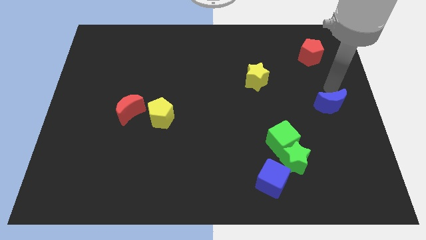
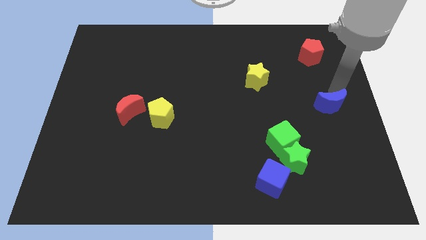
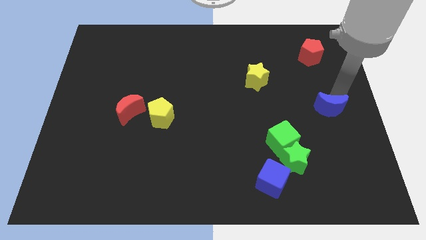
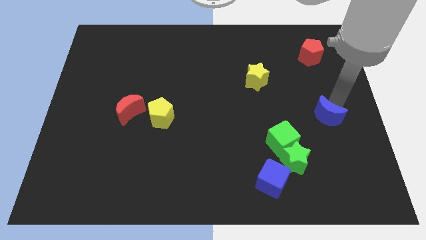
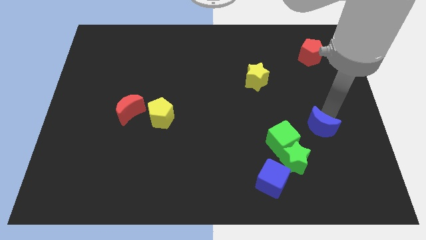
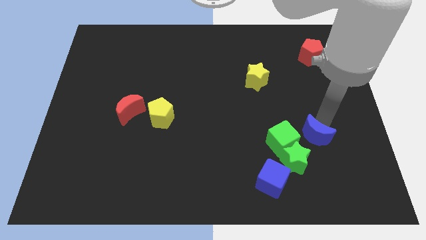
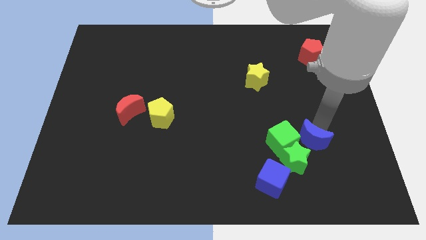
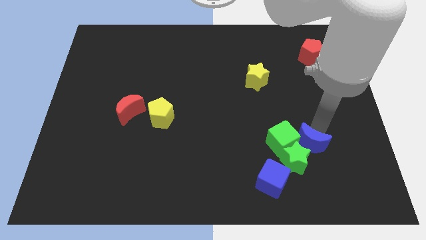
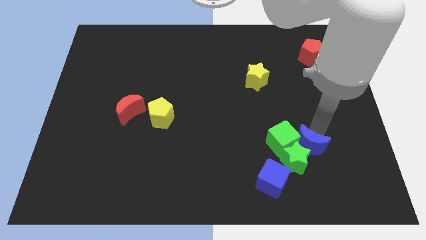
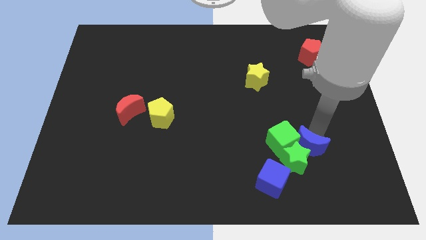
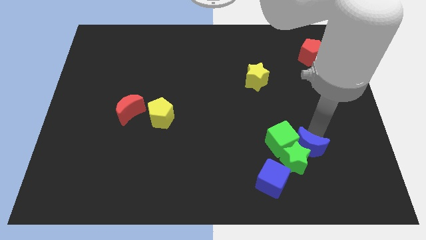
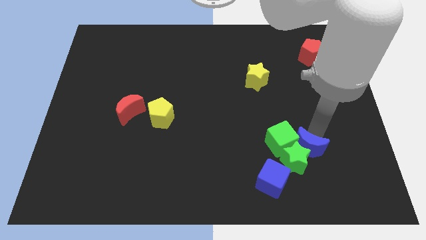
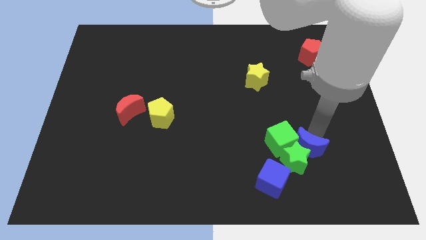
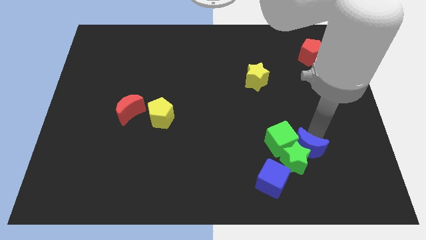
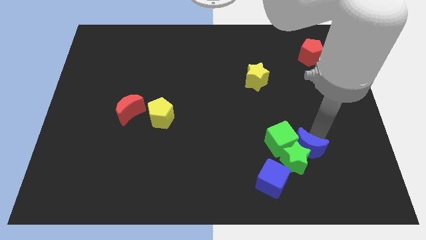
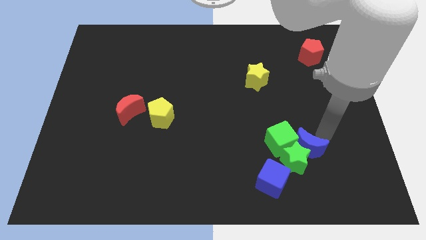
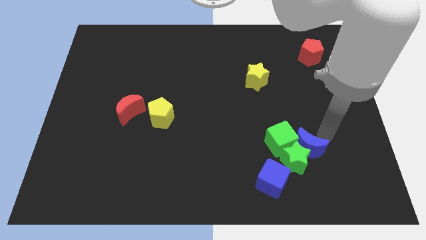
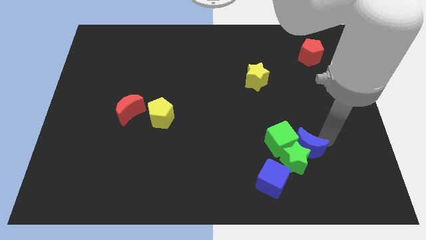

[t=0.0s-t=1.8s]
push the blue crescent towards the green star

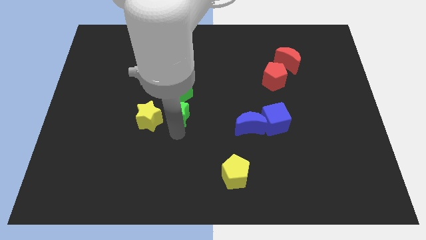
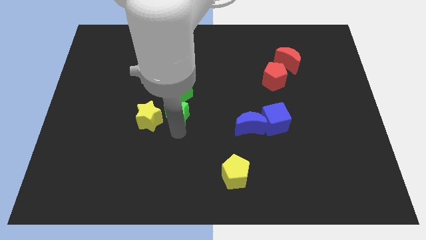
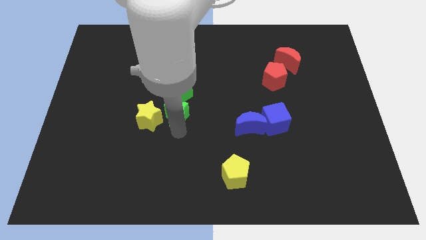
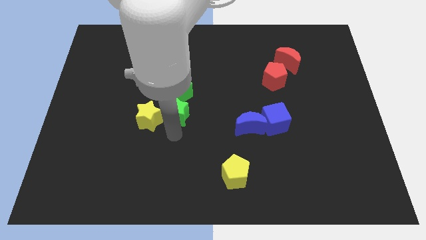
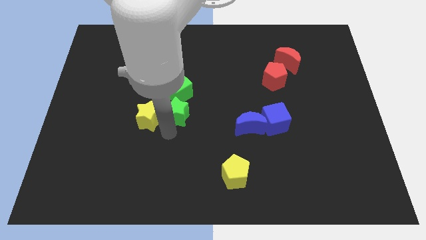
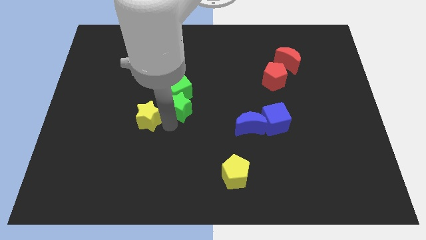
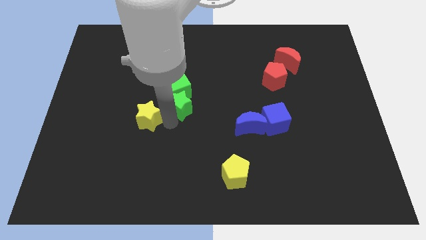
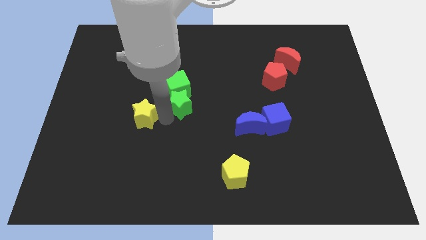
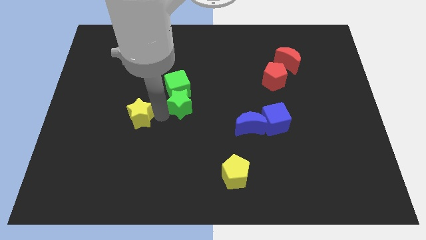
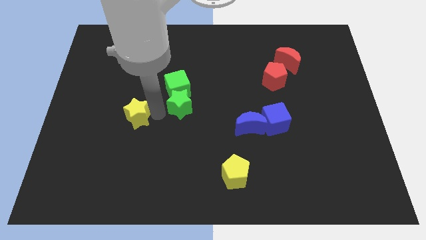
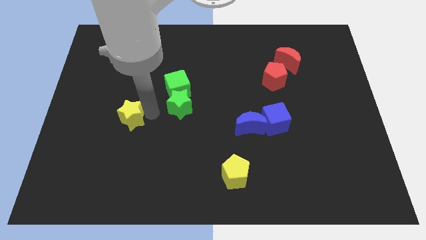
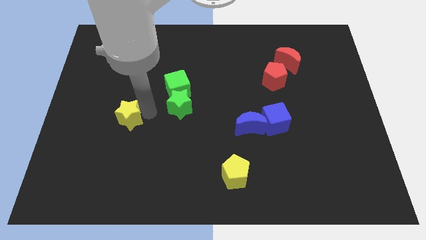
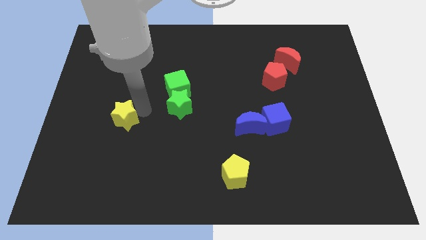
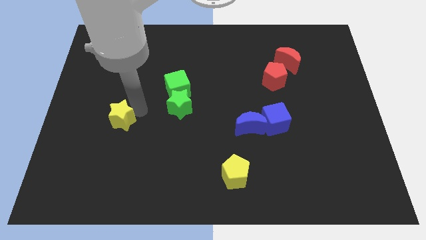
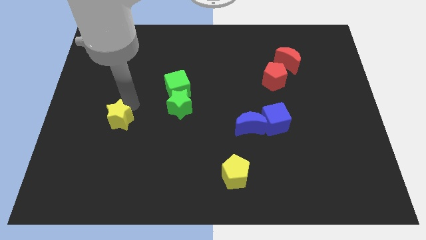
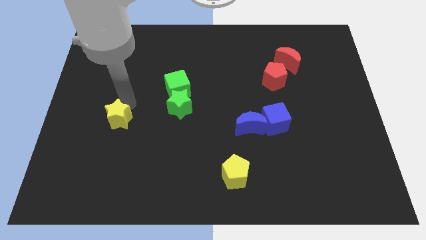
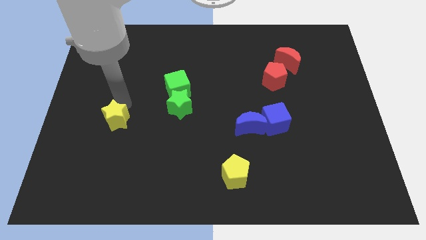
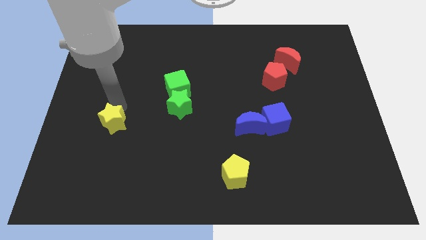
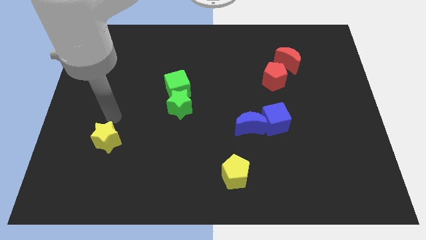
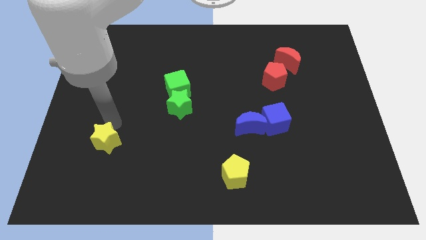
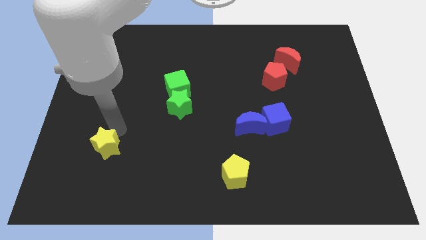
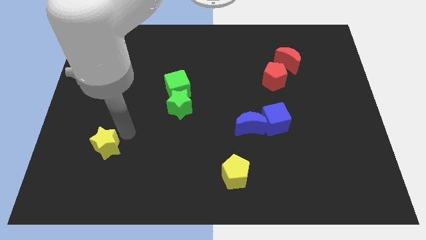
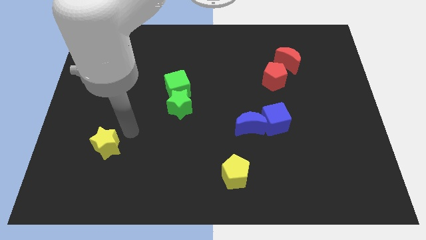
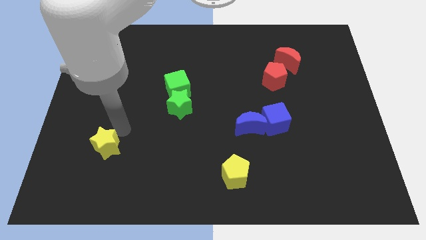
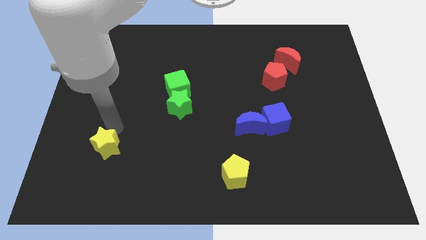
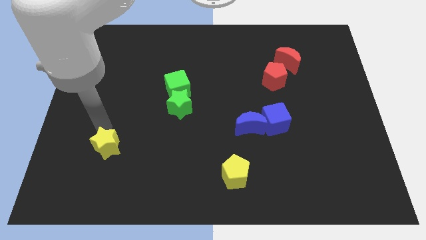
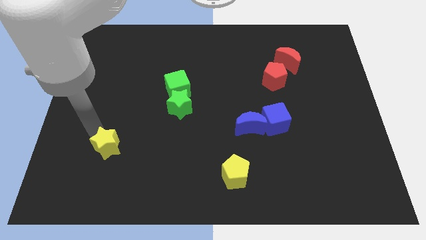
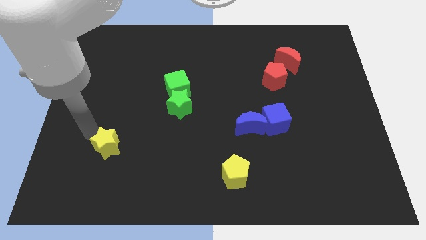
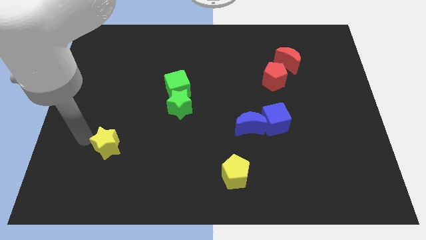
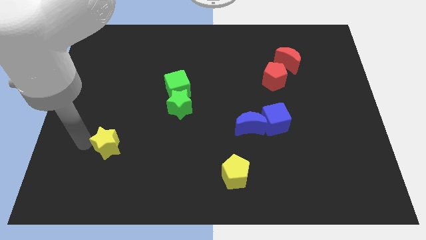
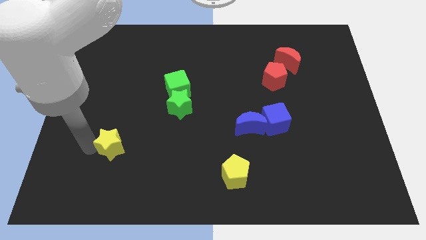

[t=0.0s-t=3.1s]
separate the yellow star from the green blocks

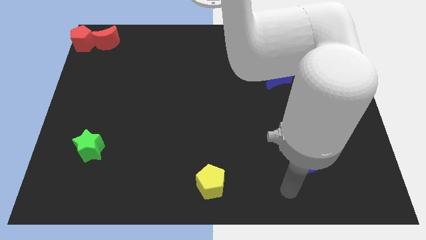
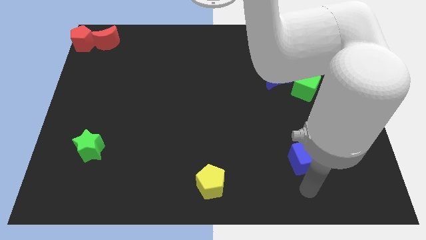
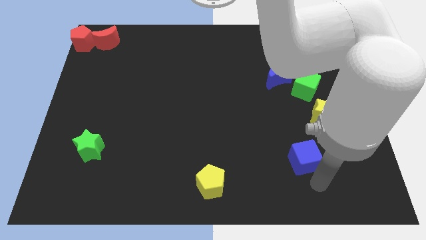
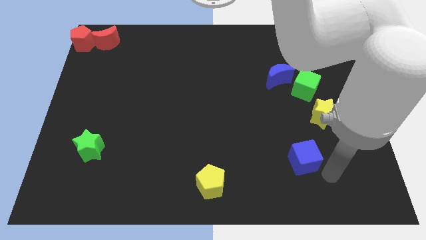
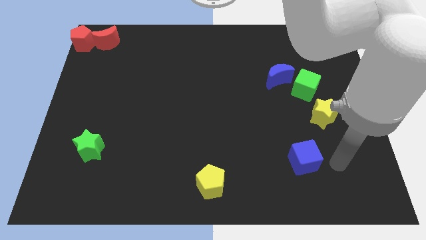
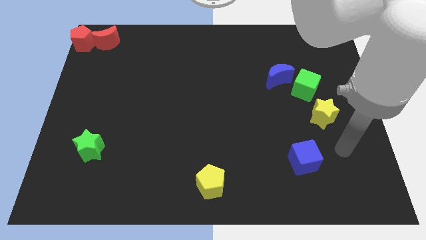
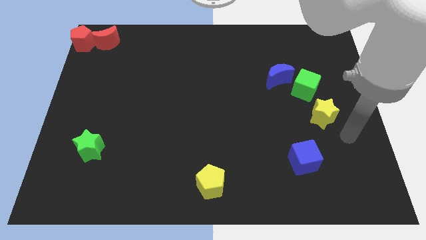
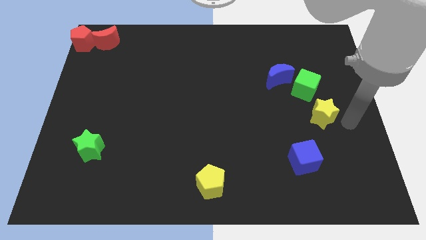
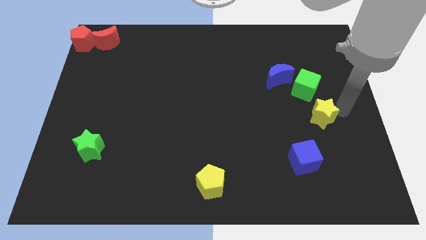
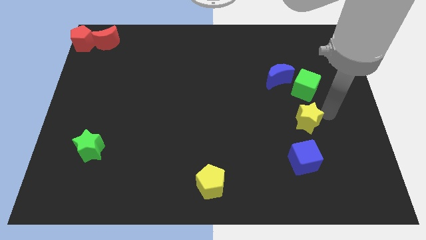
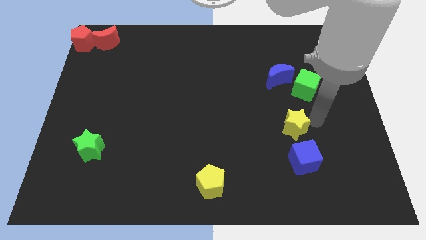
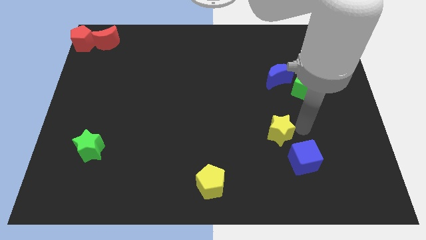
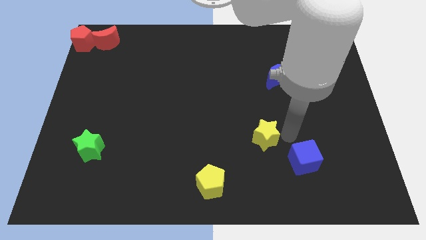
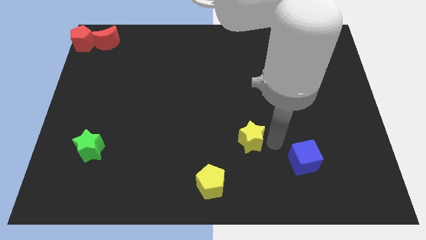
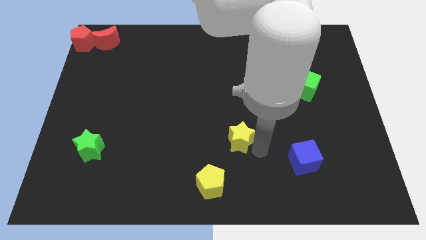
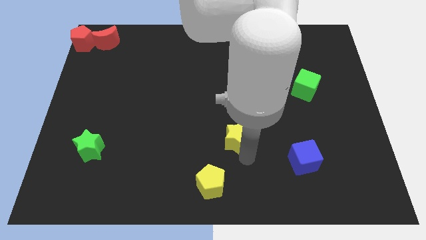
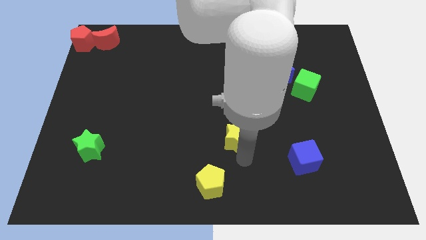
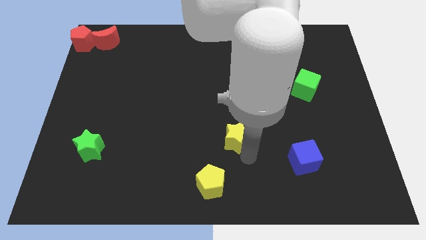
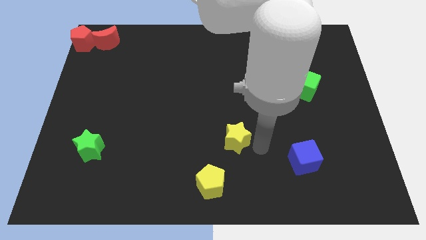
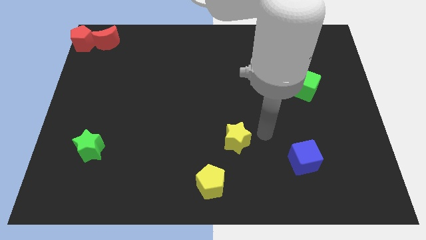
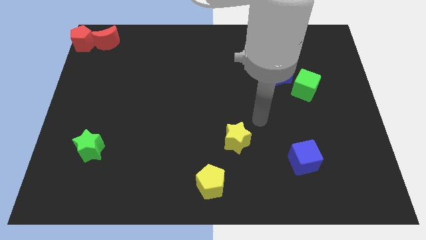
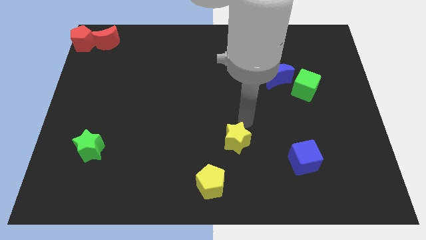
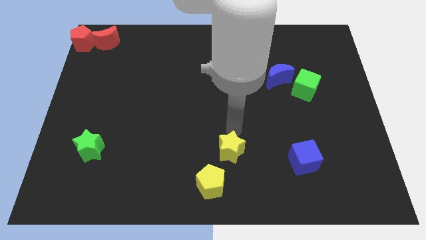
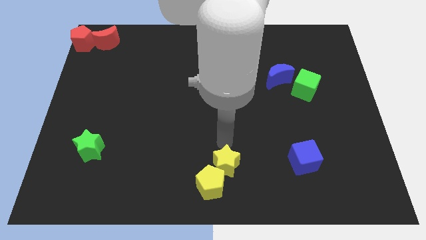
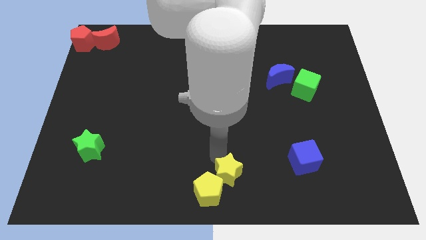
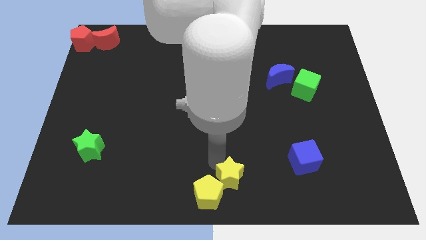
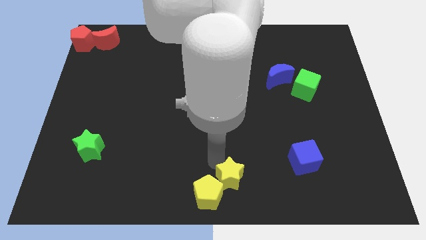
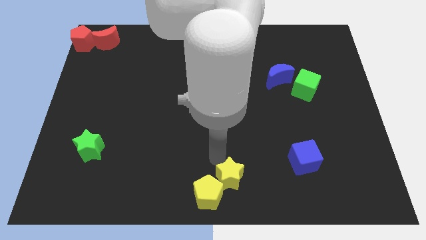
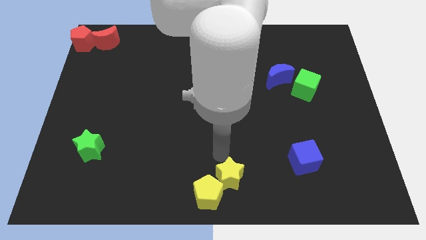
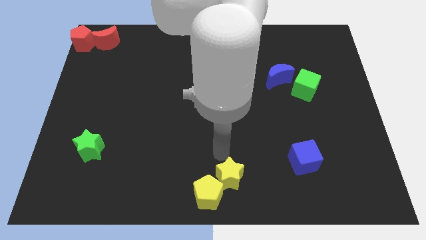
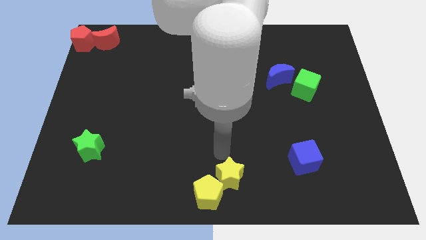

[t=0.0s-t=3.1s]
push the yellow star into the yellow pentagon

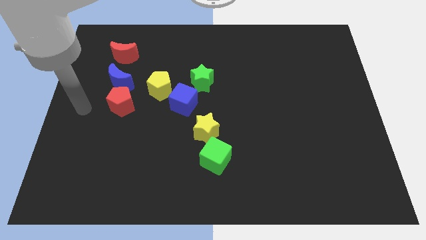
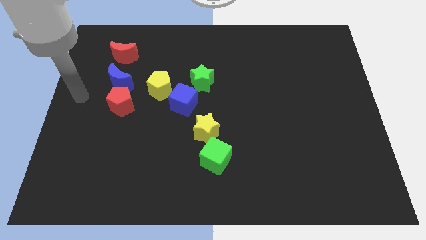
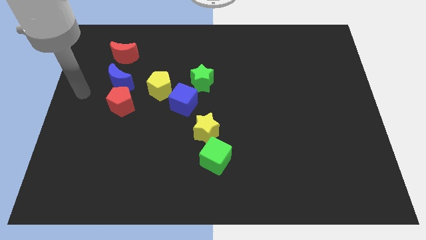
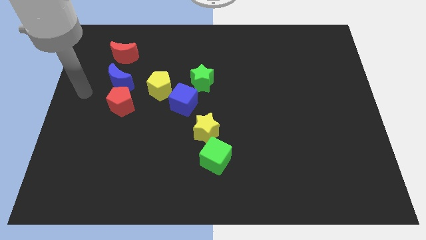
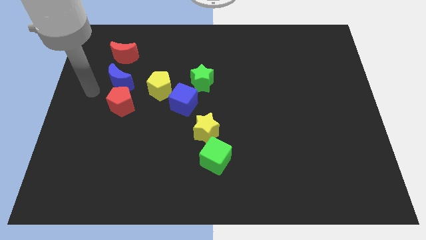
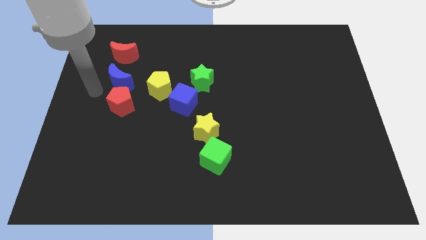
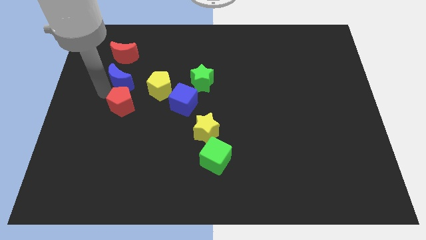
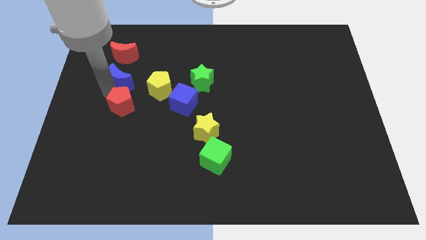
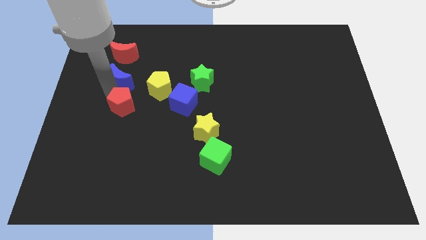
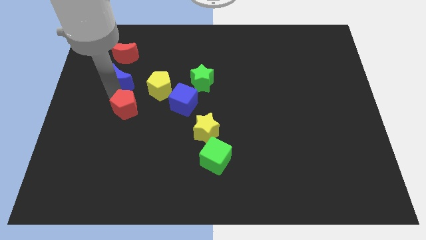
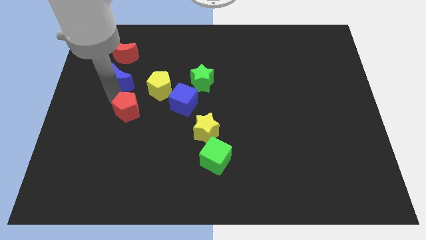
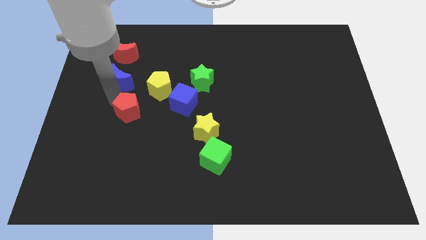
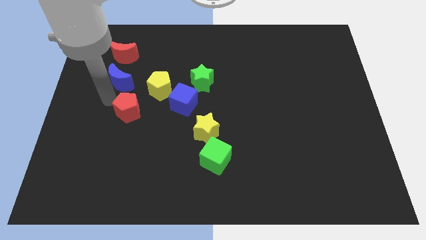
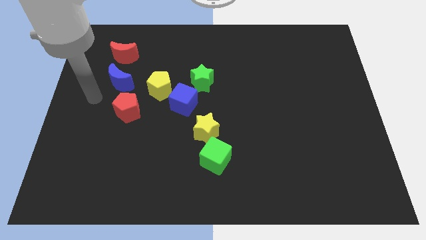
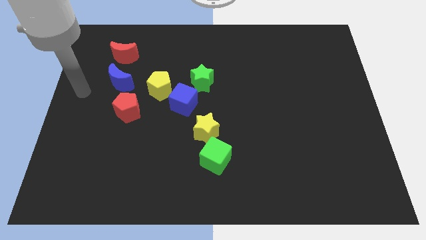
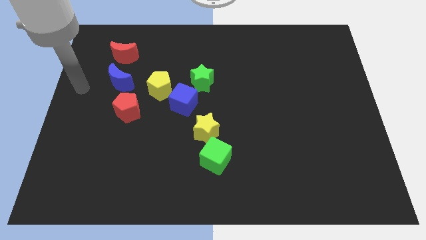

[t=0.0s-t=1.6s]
move the red pentagon slightly to the right
